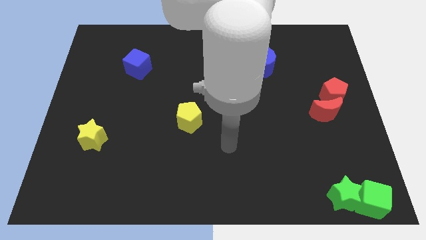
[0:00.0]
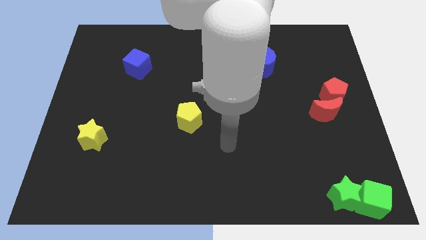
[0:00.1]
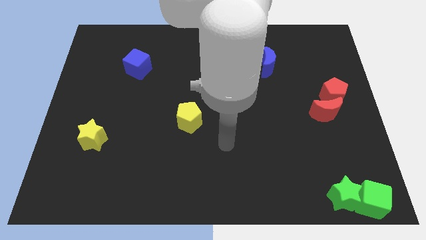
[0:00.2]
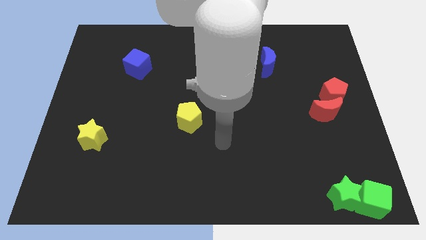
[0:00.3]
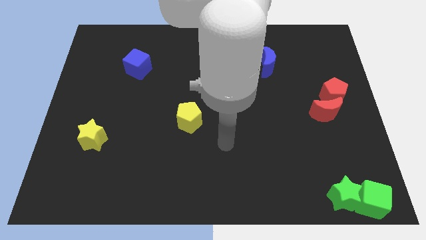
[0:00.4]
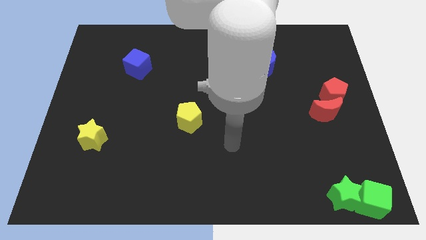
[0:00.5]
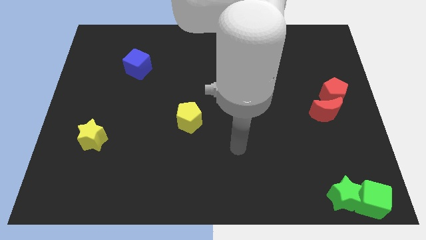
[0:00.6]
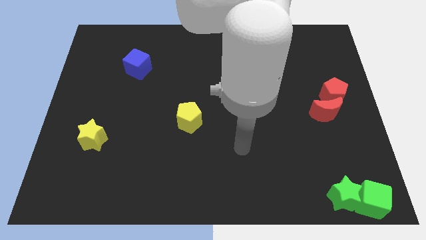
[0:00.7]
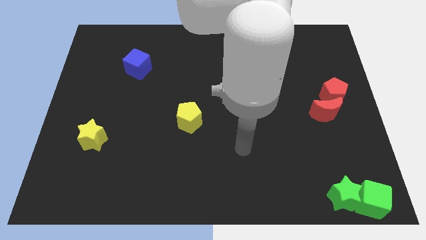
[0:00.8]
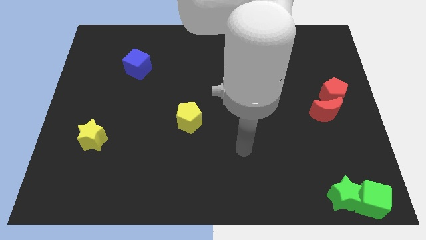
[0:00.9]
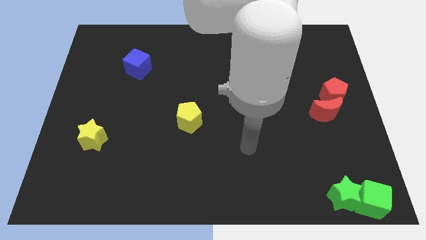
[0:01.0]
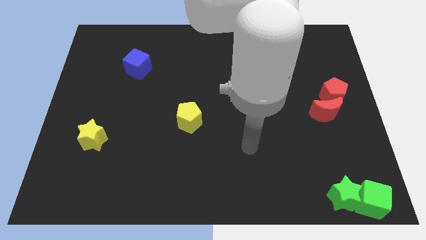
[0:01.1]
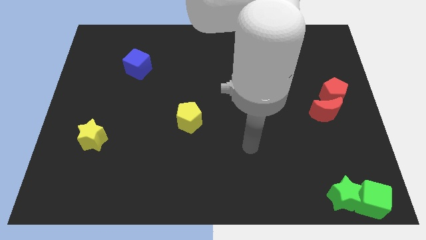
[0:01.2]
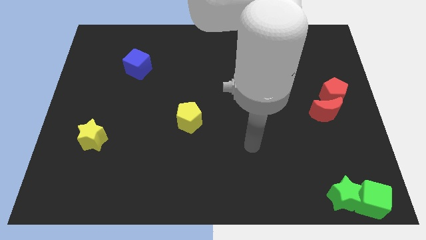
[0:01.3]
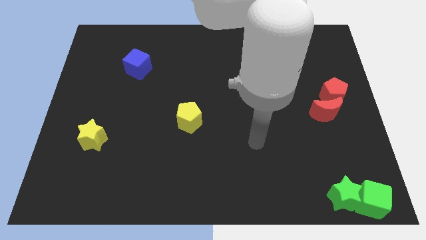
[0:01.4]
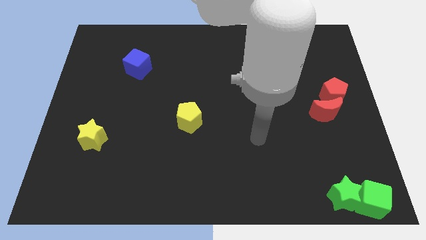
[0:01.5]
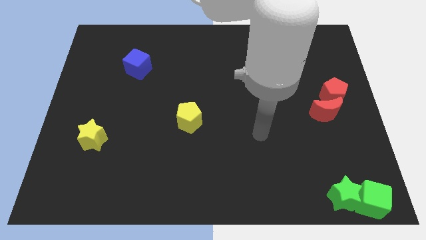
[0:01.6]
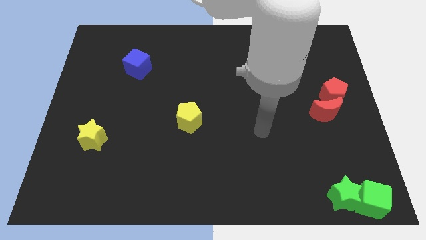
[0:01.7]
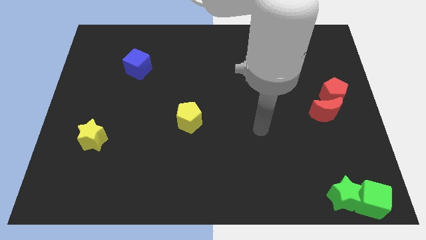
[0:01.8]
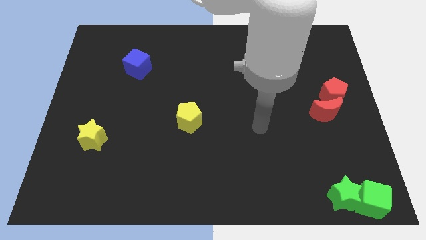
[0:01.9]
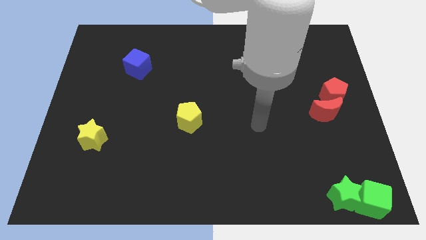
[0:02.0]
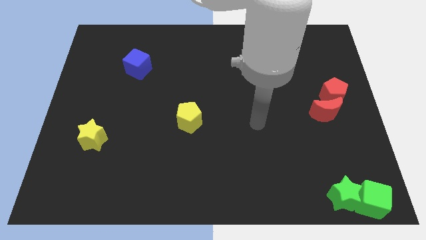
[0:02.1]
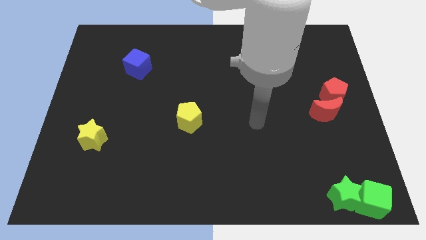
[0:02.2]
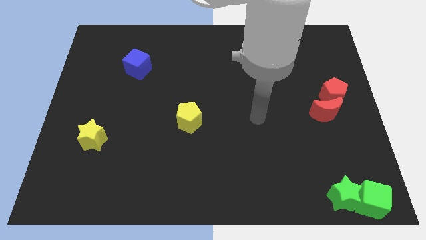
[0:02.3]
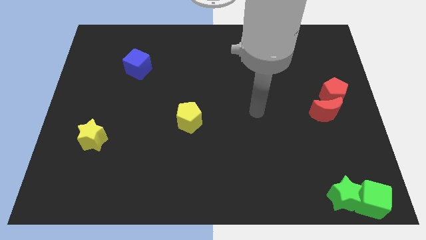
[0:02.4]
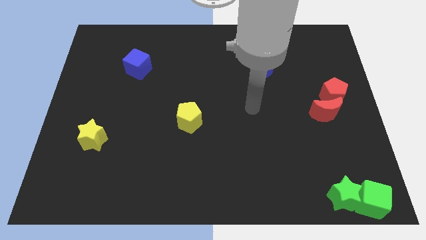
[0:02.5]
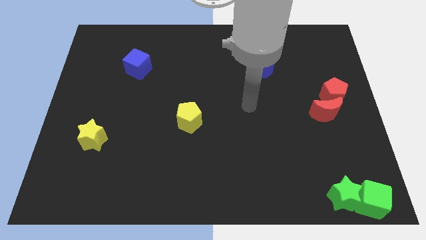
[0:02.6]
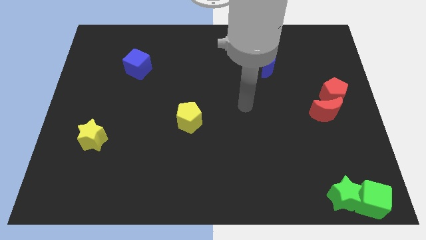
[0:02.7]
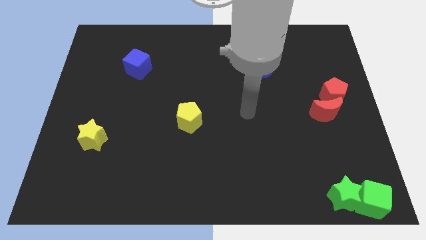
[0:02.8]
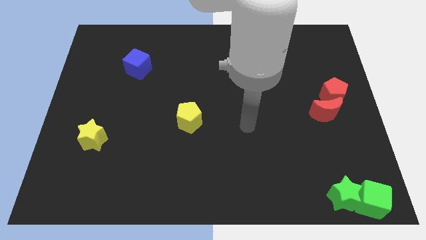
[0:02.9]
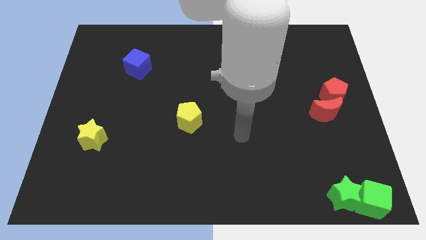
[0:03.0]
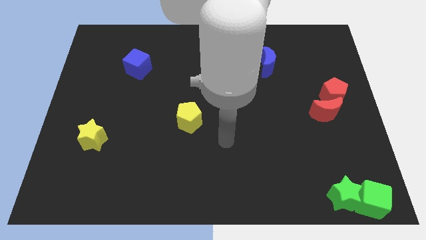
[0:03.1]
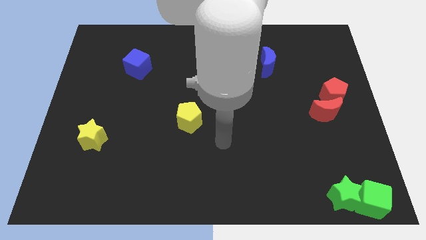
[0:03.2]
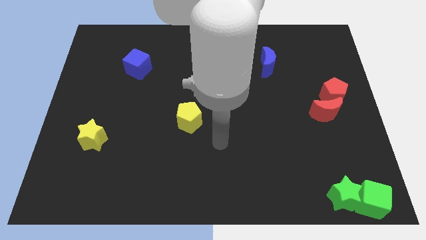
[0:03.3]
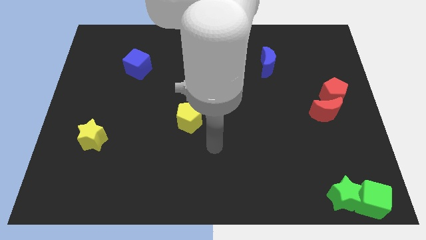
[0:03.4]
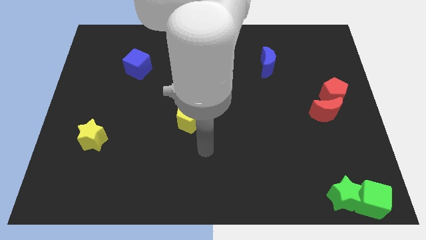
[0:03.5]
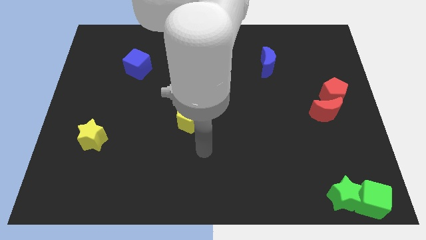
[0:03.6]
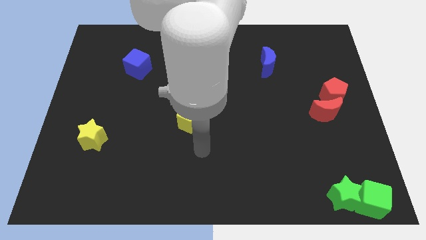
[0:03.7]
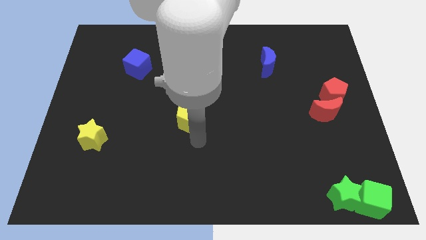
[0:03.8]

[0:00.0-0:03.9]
place the arm down to the yellow pentagon

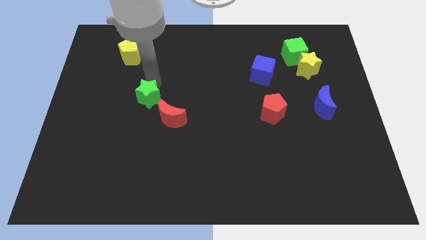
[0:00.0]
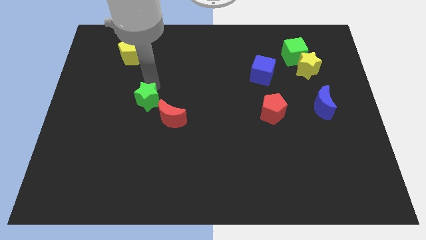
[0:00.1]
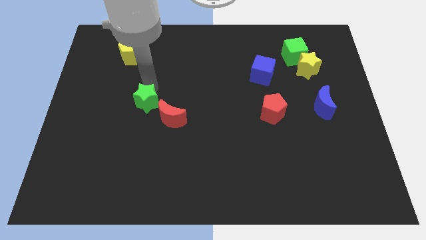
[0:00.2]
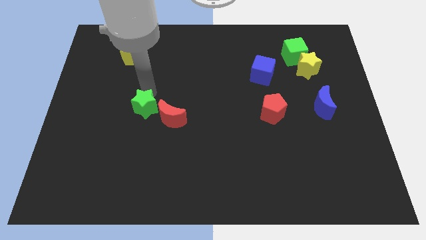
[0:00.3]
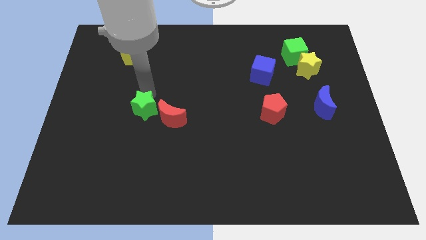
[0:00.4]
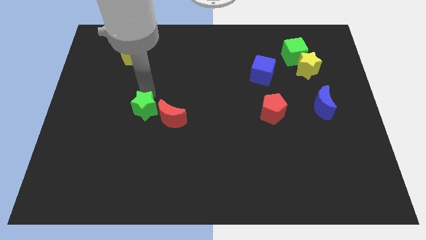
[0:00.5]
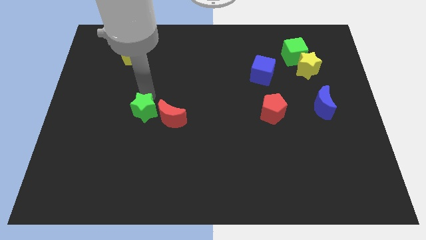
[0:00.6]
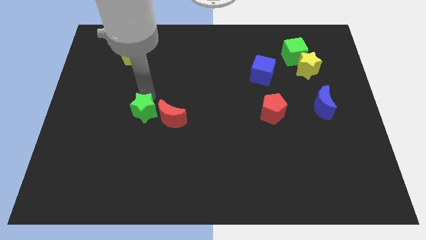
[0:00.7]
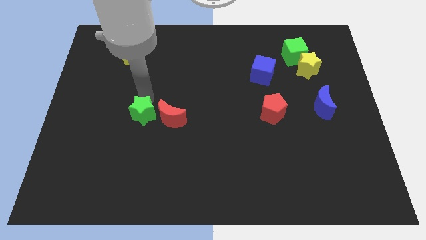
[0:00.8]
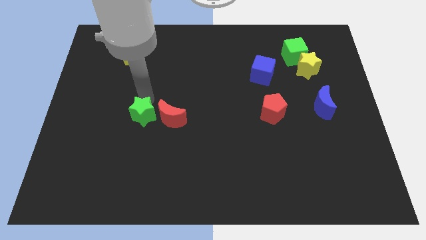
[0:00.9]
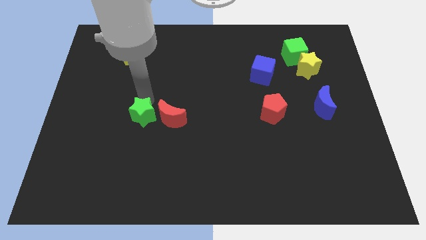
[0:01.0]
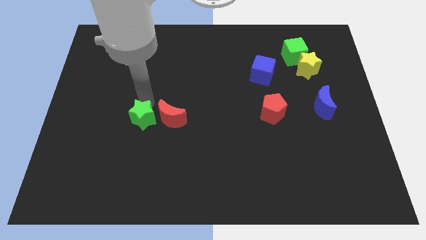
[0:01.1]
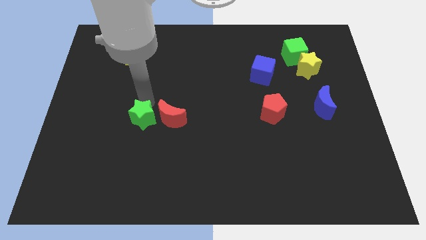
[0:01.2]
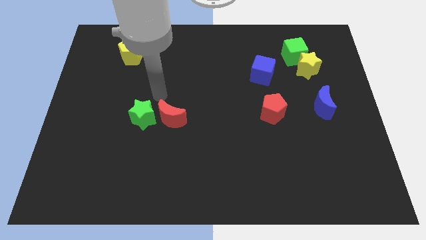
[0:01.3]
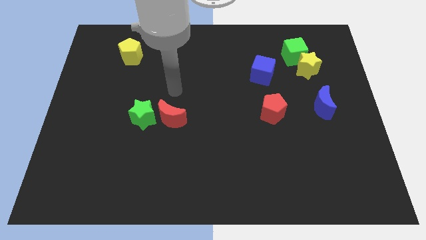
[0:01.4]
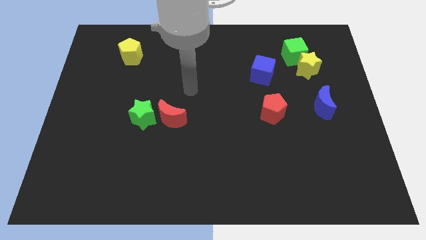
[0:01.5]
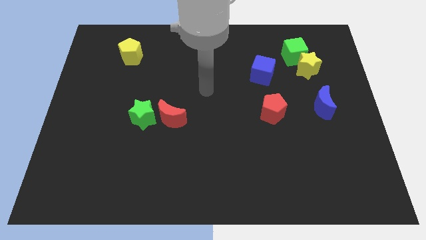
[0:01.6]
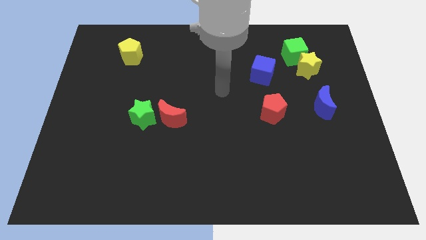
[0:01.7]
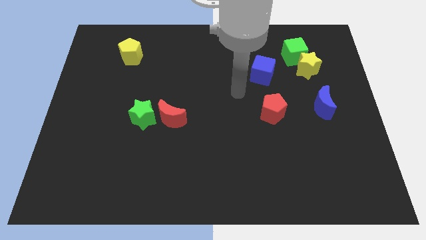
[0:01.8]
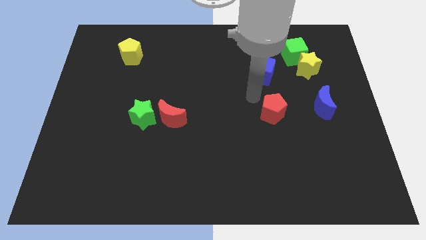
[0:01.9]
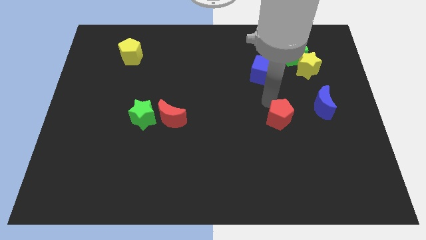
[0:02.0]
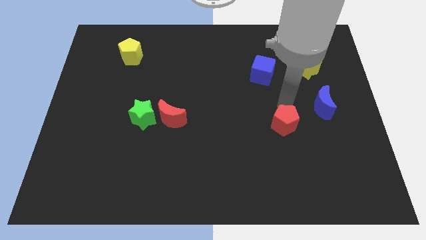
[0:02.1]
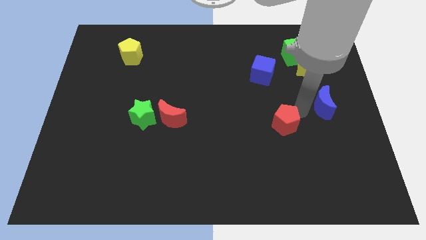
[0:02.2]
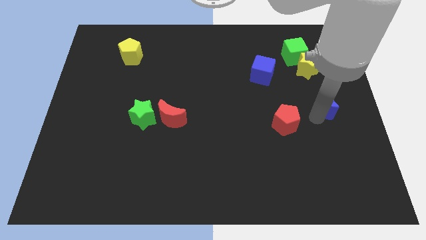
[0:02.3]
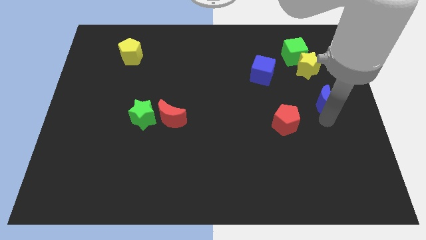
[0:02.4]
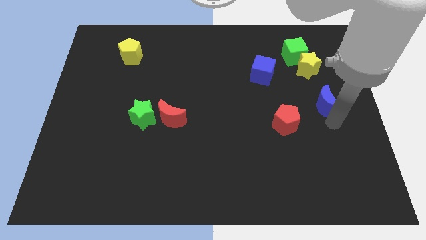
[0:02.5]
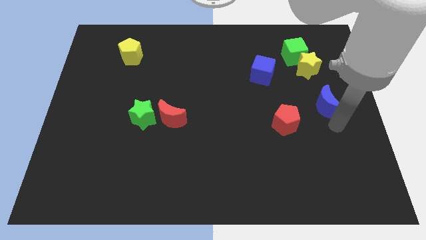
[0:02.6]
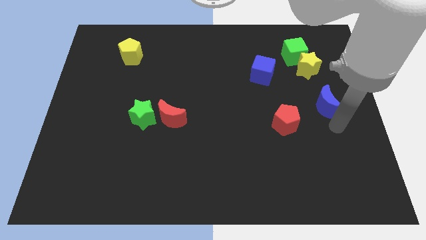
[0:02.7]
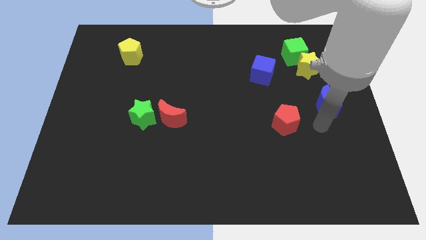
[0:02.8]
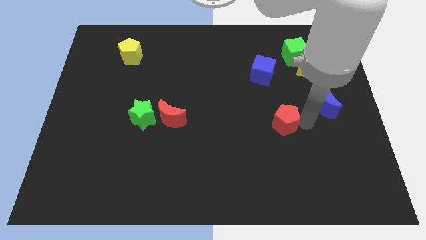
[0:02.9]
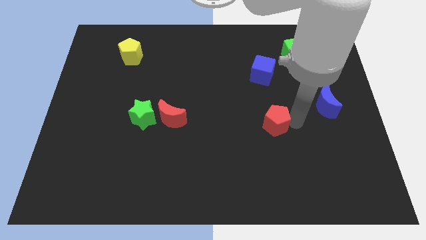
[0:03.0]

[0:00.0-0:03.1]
place your arm to the right of red pentagon

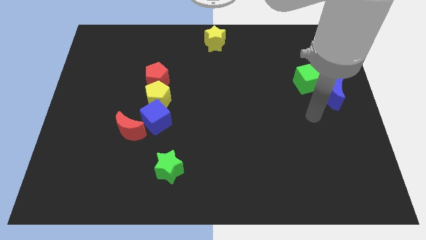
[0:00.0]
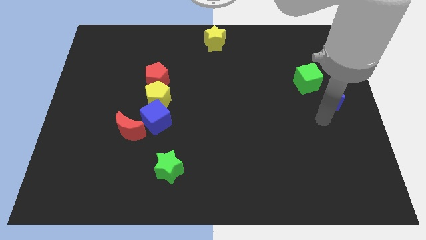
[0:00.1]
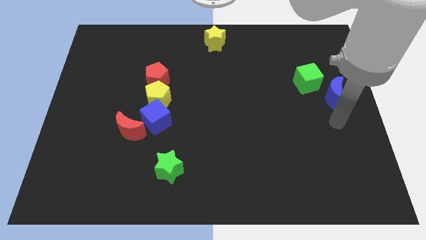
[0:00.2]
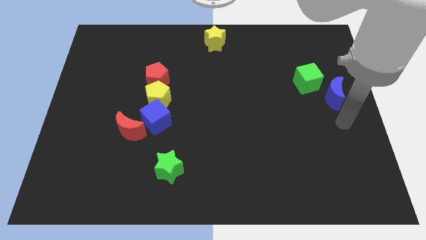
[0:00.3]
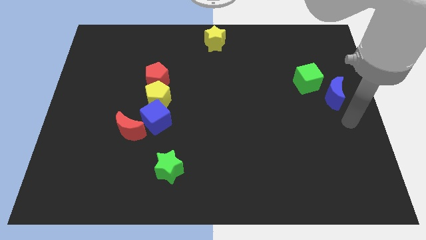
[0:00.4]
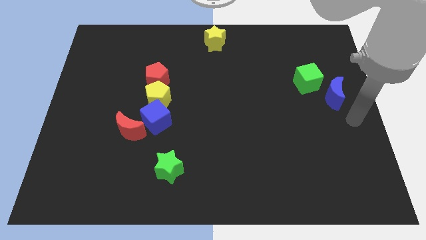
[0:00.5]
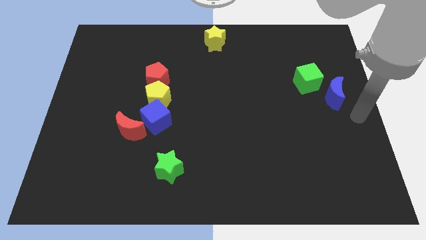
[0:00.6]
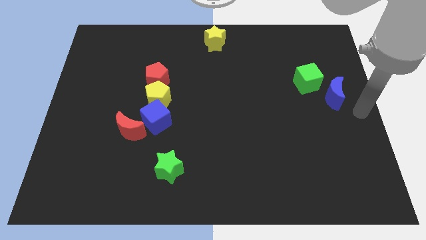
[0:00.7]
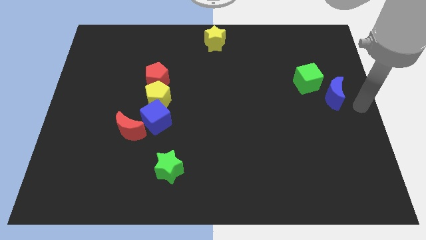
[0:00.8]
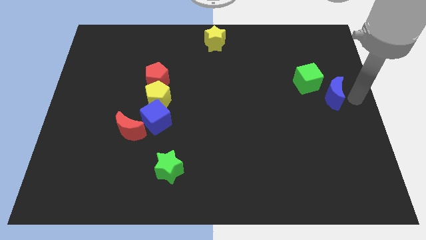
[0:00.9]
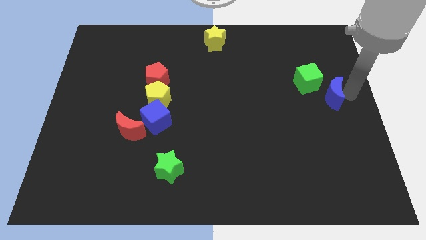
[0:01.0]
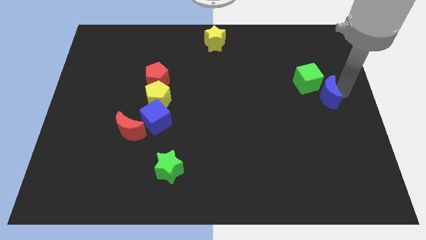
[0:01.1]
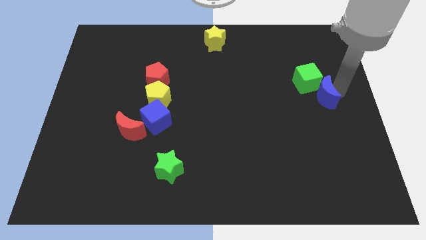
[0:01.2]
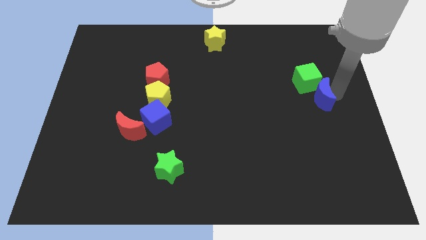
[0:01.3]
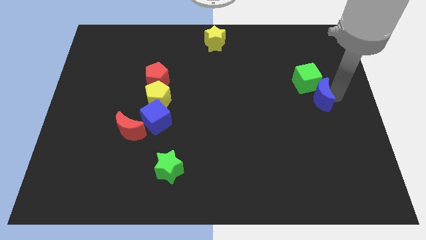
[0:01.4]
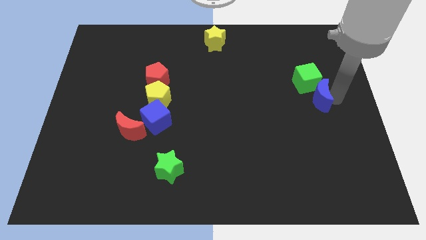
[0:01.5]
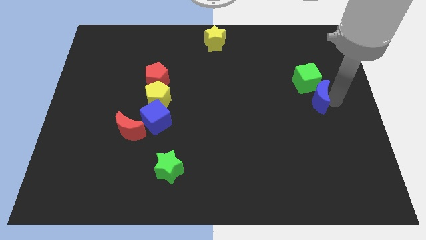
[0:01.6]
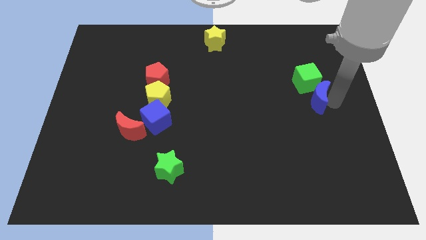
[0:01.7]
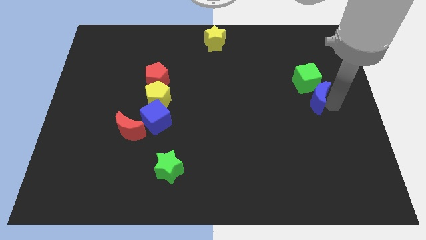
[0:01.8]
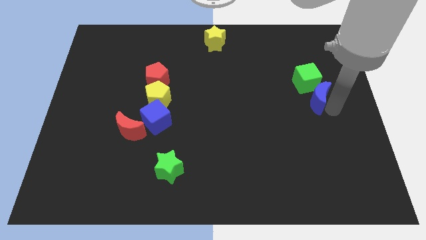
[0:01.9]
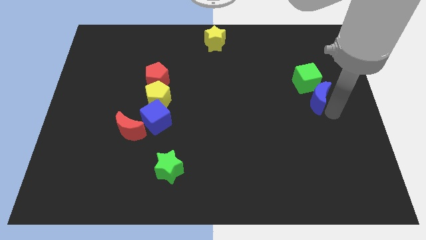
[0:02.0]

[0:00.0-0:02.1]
push the blue moon into the green cube
